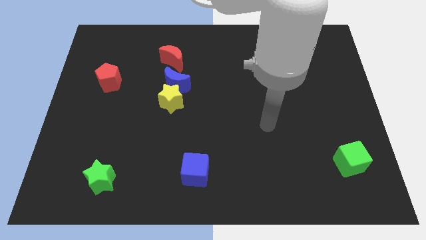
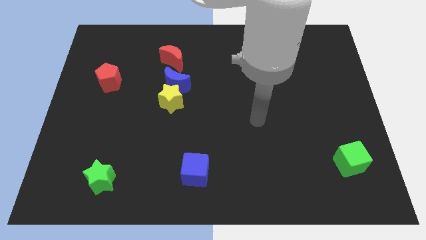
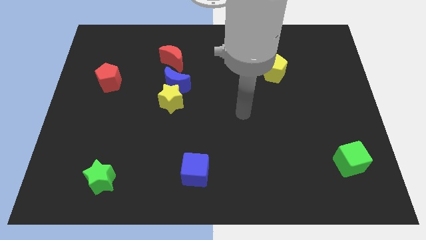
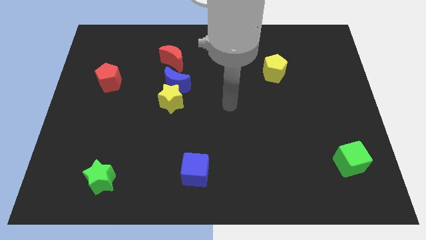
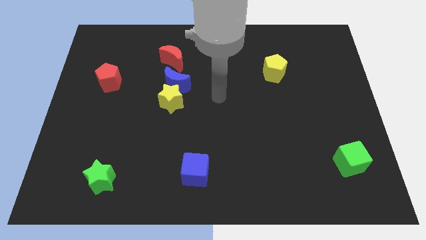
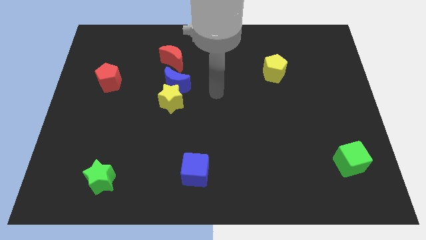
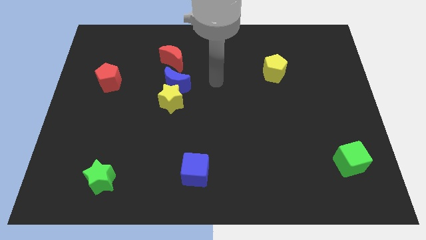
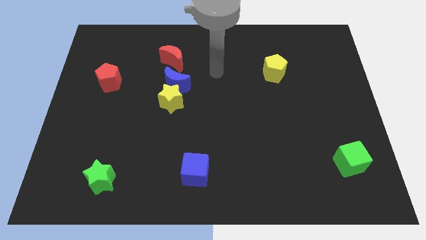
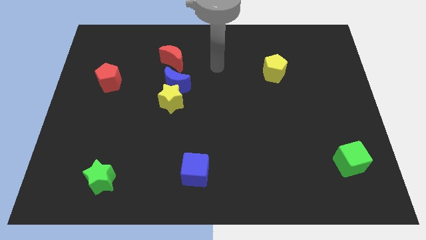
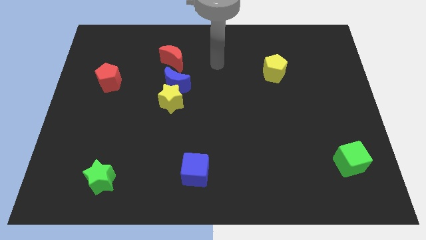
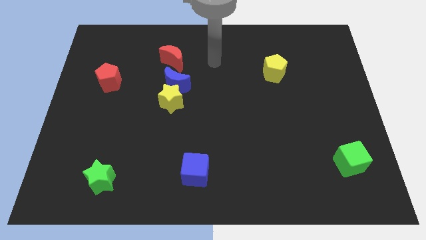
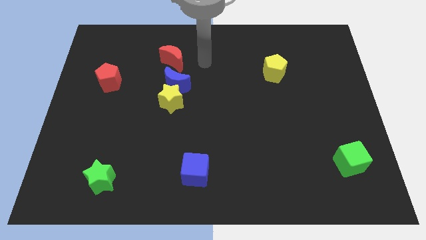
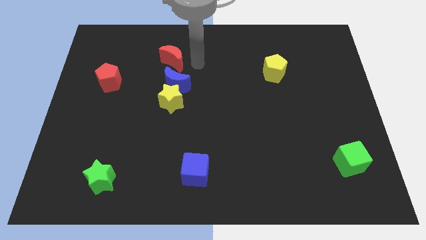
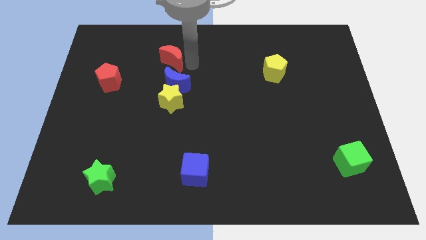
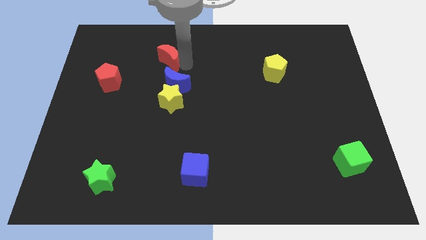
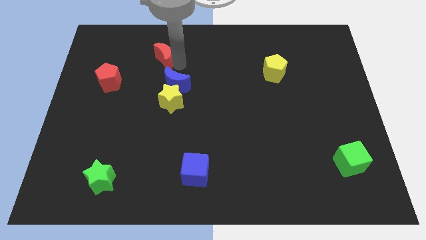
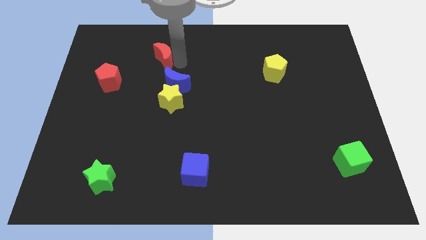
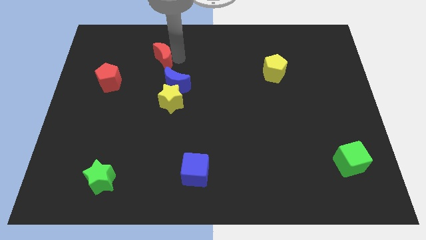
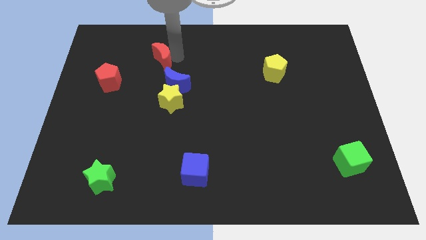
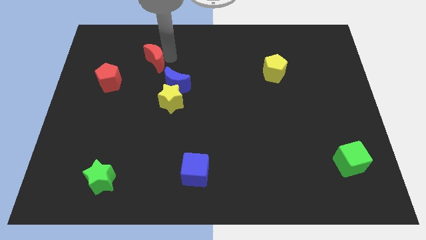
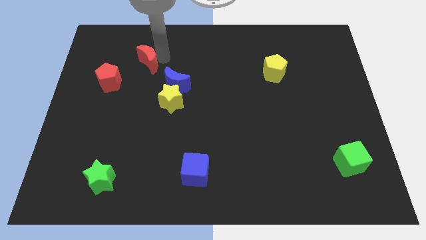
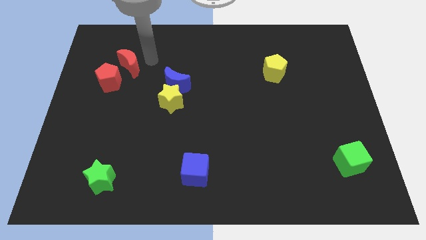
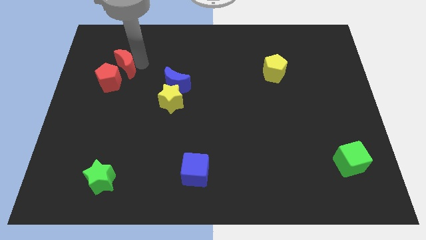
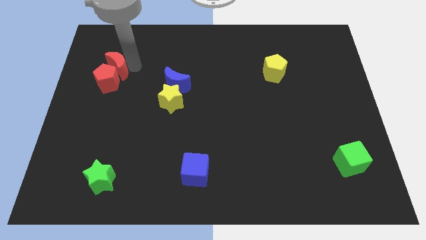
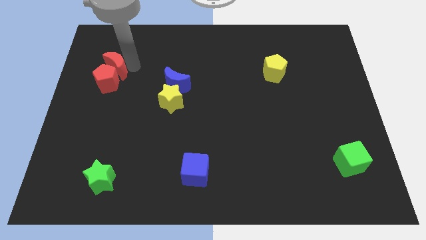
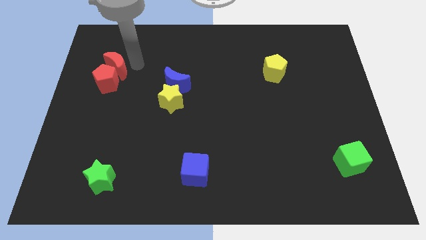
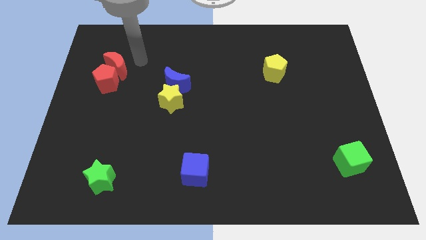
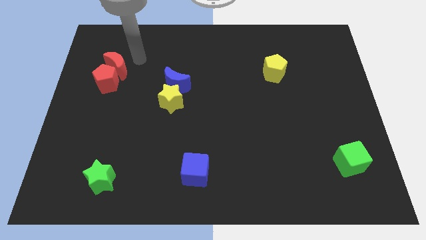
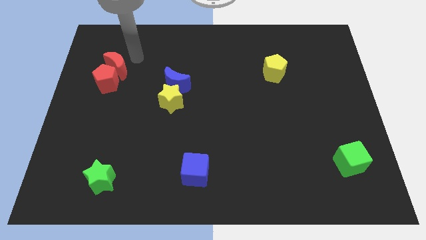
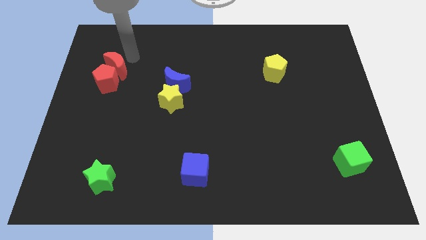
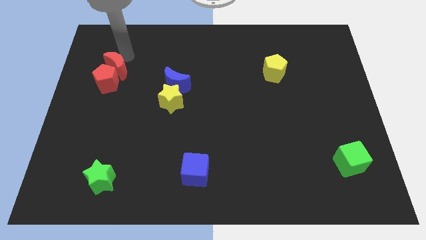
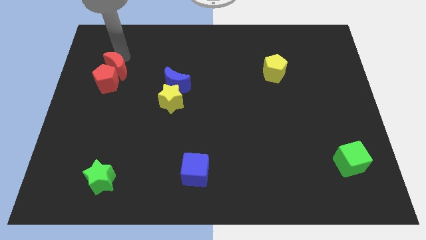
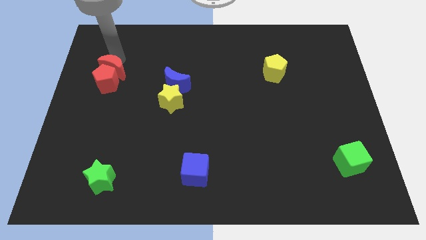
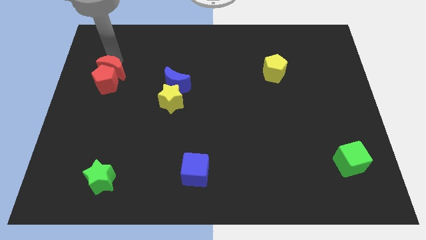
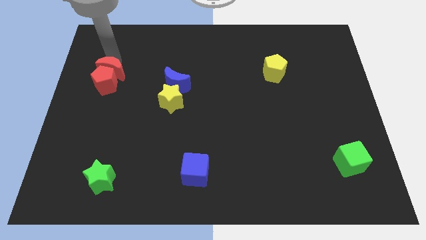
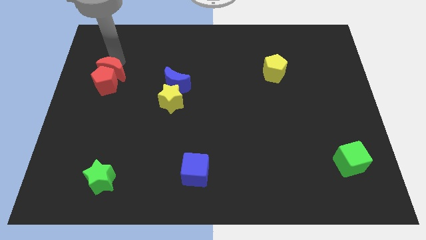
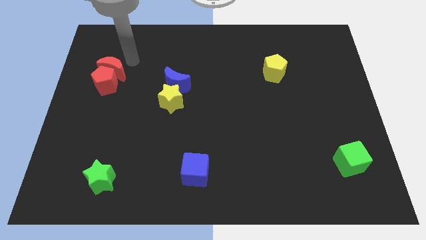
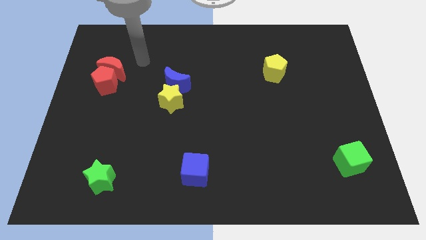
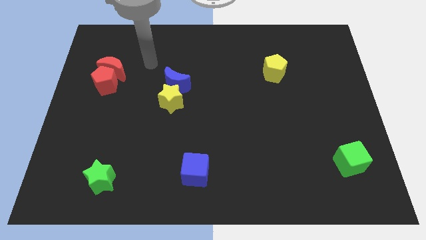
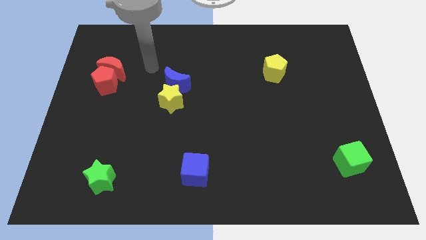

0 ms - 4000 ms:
place the red crescent above the red pentagon

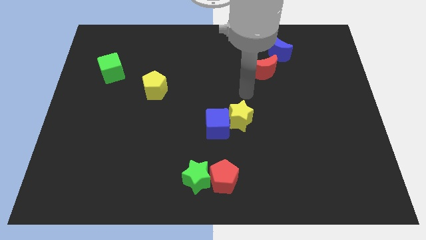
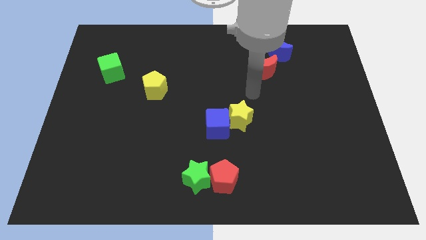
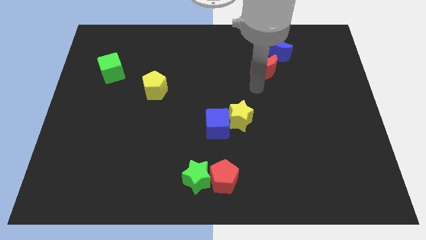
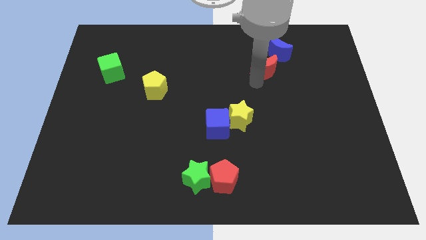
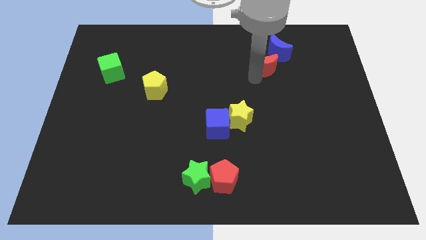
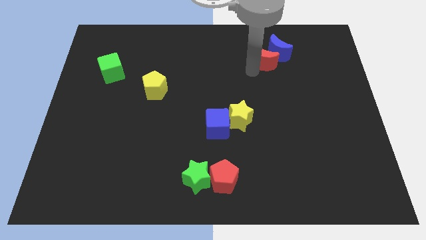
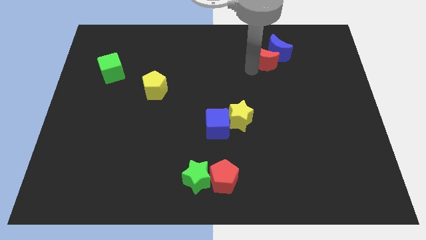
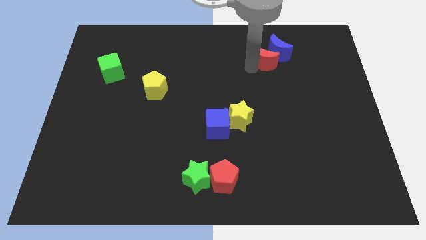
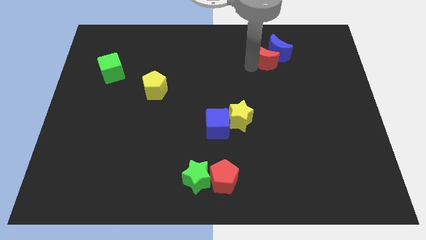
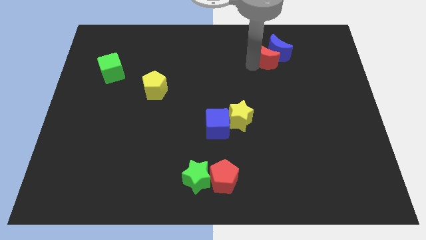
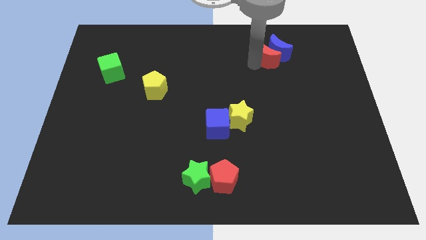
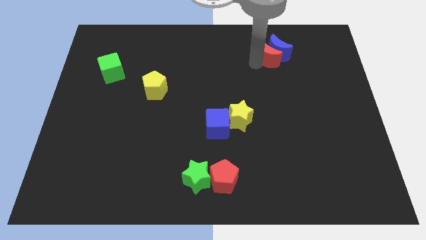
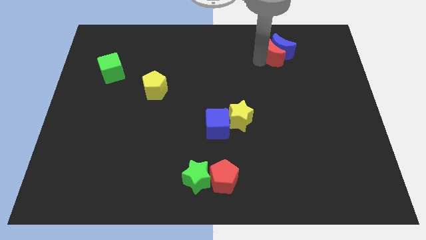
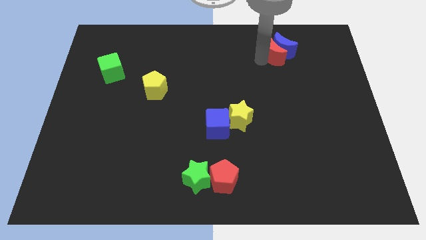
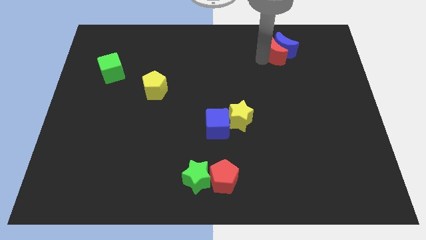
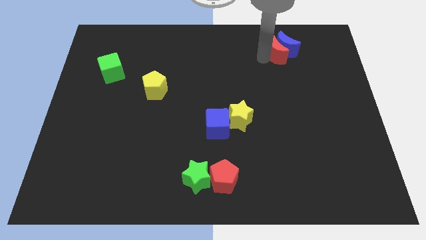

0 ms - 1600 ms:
move the red crescent into the blue moon

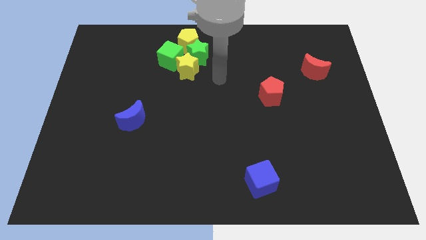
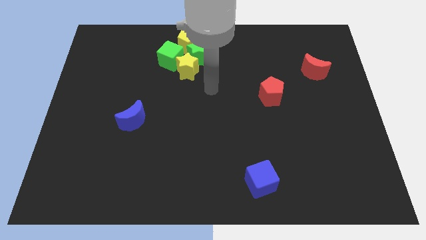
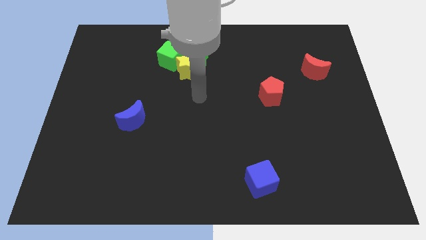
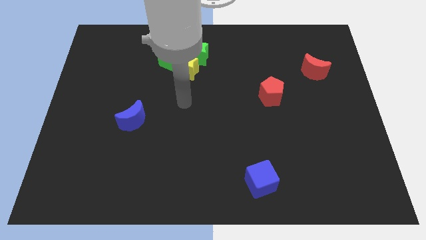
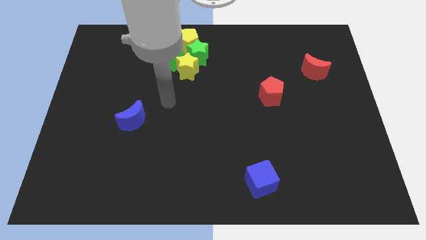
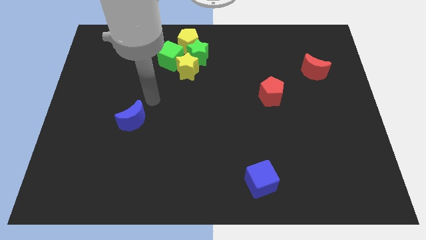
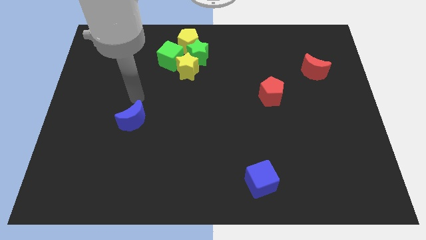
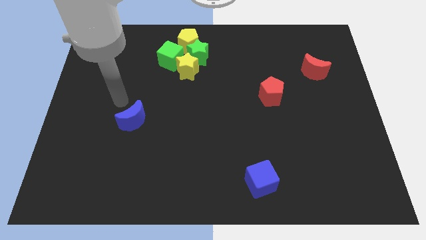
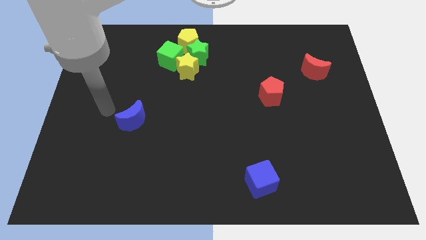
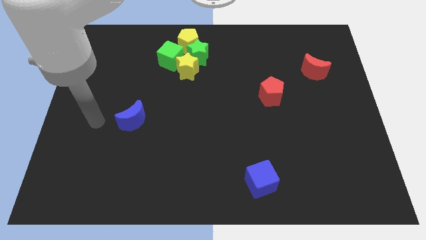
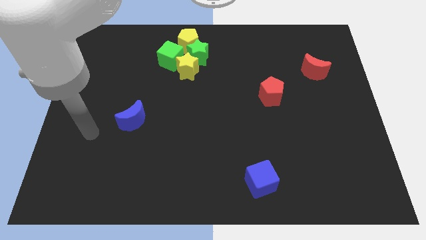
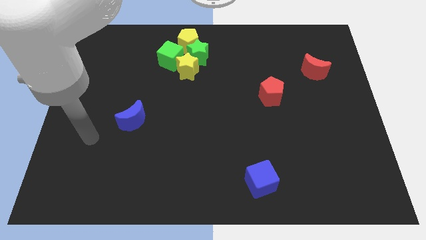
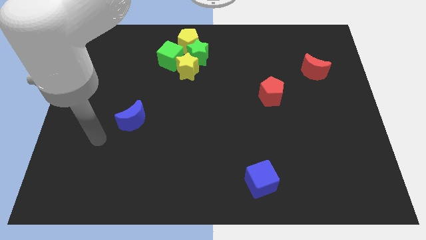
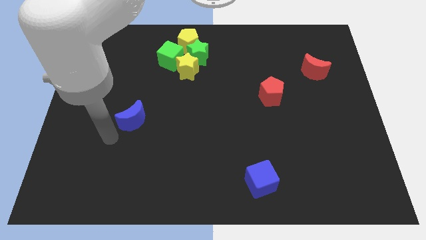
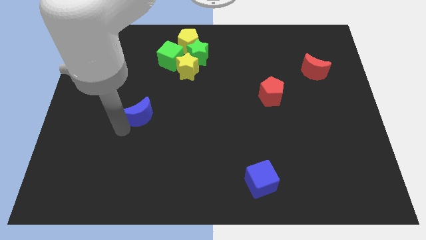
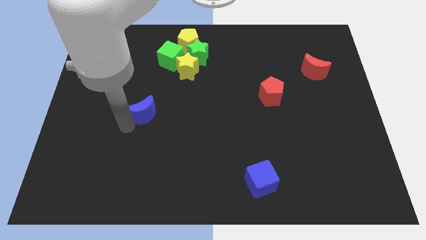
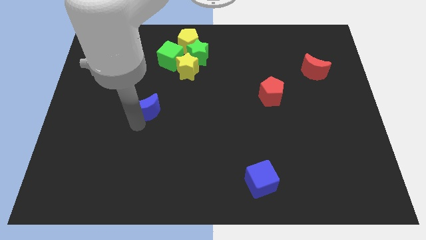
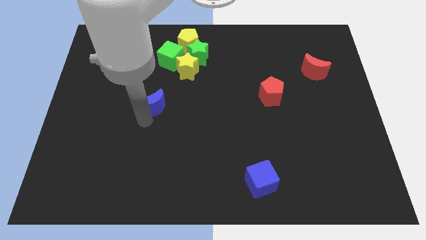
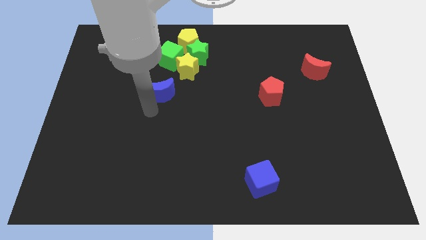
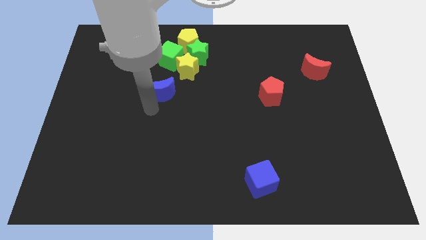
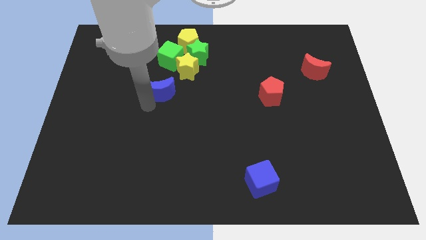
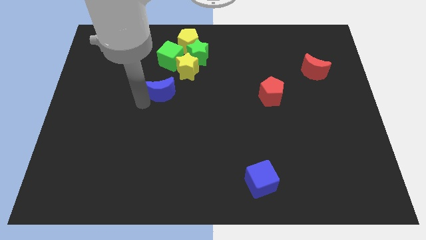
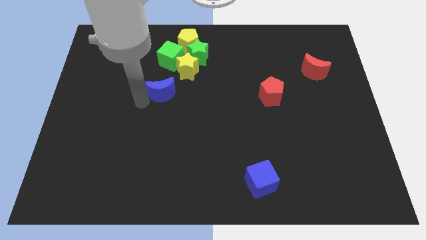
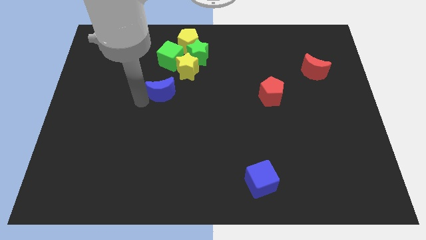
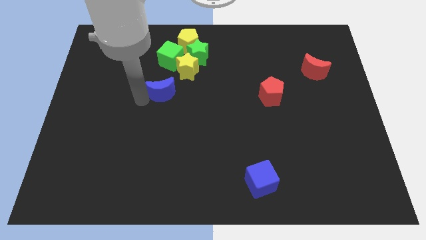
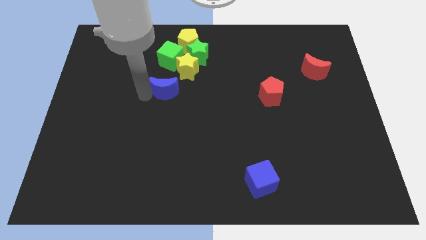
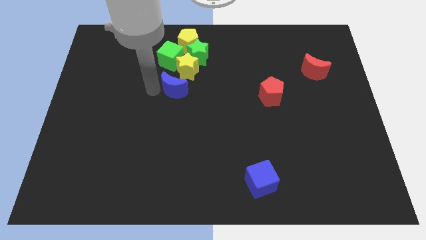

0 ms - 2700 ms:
push blue crescent towards group of blocks

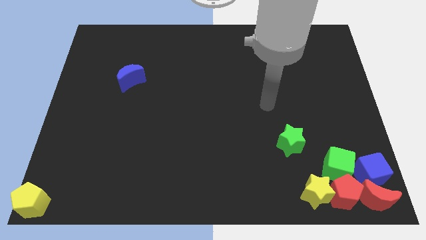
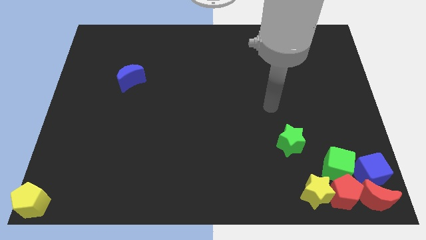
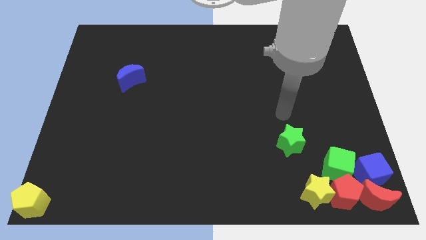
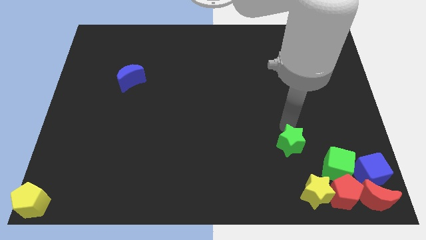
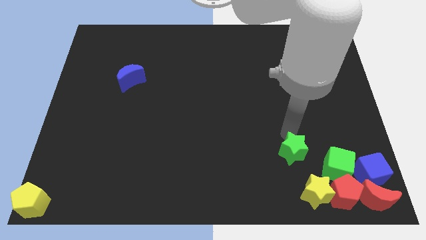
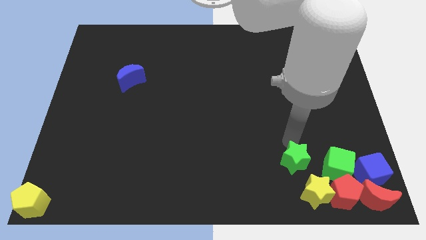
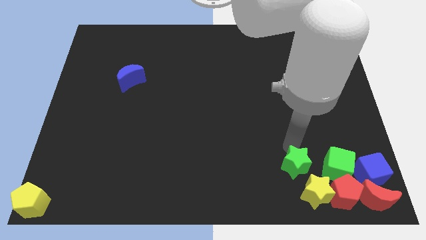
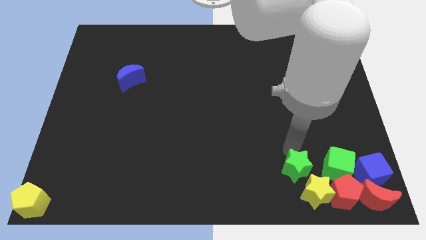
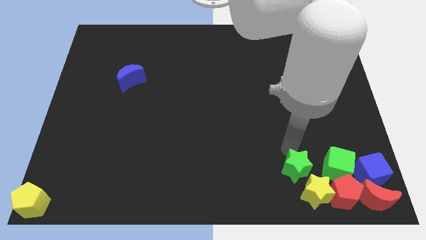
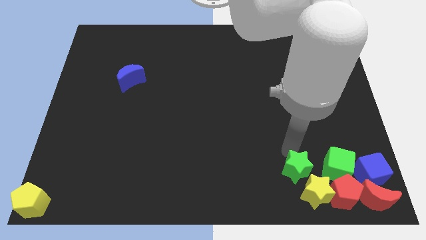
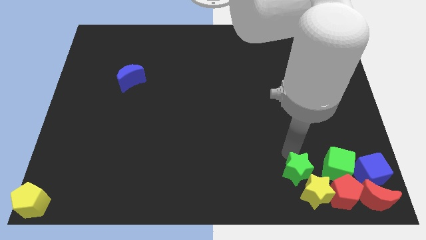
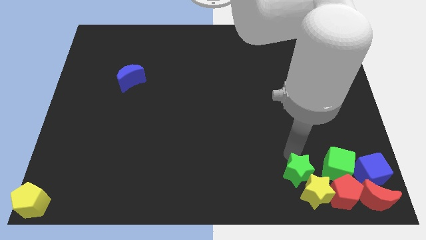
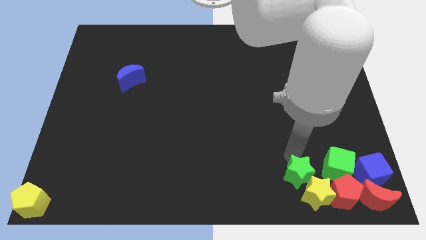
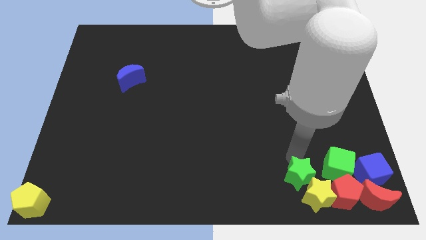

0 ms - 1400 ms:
move the green towards the yellow star
